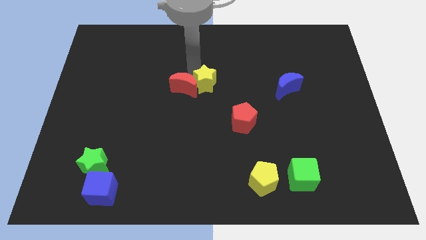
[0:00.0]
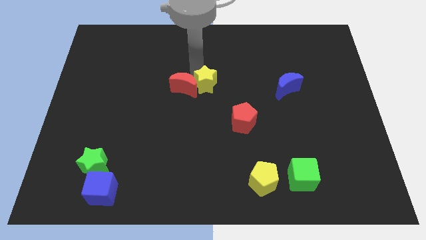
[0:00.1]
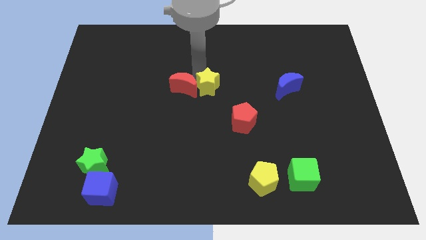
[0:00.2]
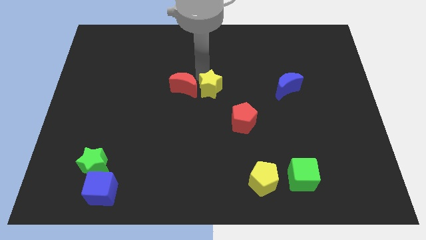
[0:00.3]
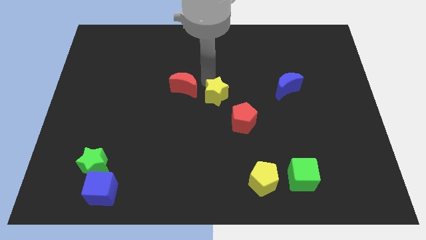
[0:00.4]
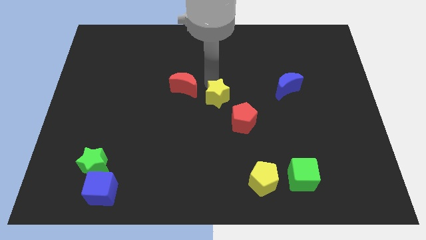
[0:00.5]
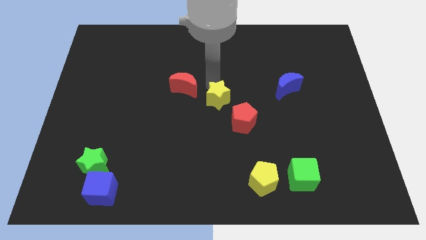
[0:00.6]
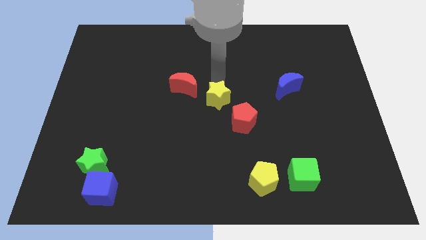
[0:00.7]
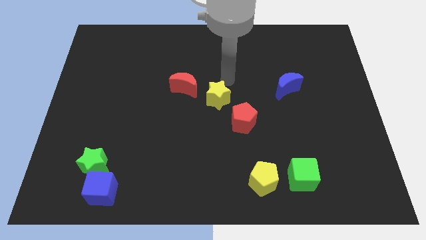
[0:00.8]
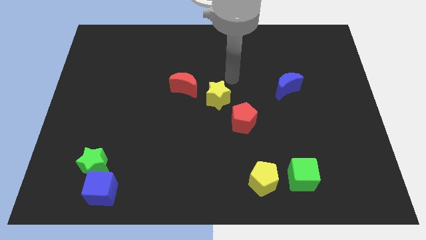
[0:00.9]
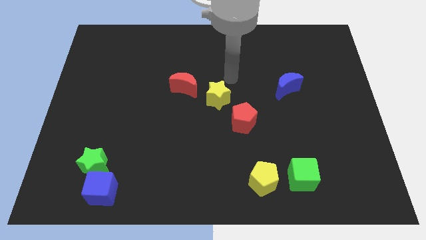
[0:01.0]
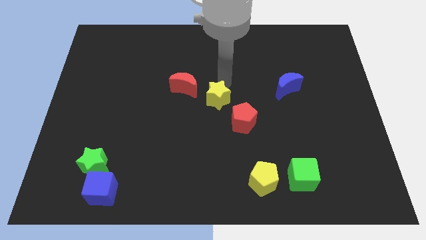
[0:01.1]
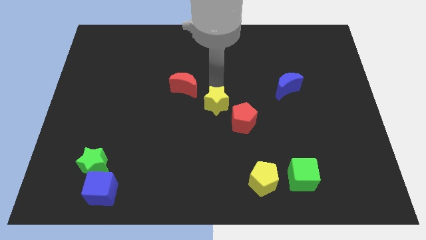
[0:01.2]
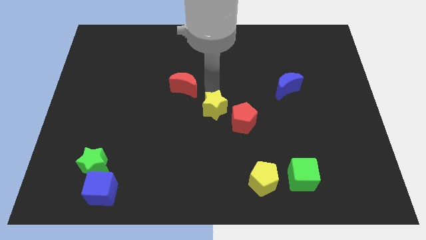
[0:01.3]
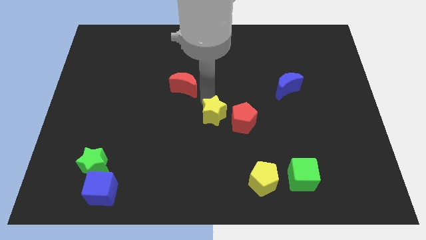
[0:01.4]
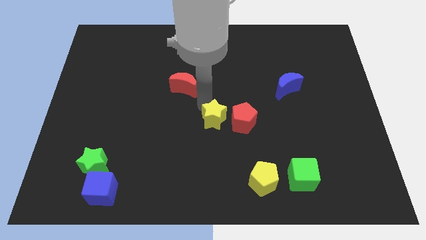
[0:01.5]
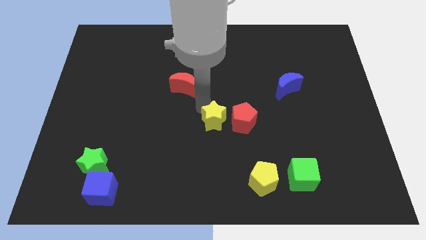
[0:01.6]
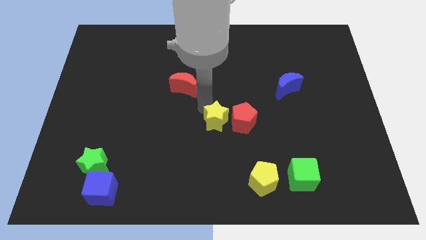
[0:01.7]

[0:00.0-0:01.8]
place the yellow star close to the red pentagon

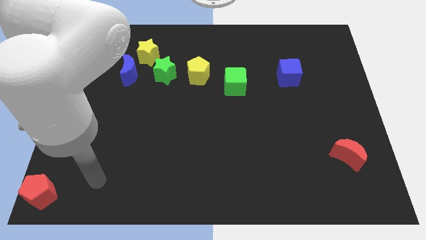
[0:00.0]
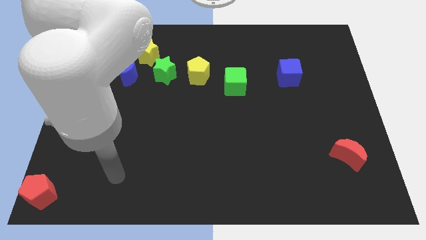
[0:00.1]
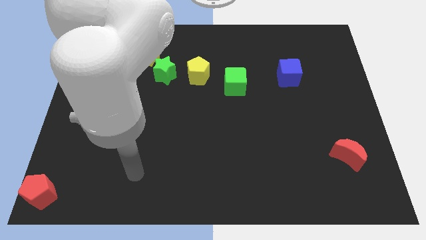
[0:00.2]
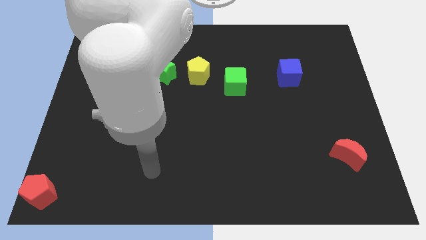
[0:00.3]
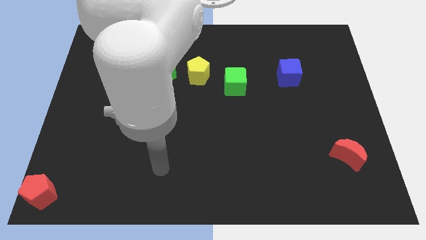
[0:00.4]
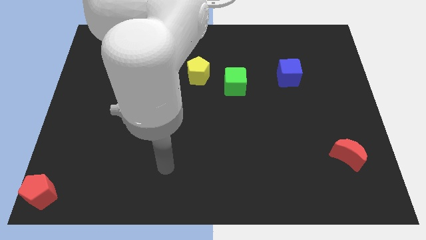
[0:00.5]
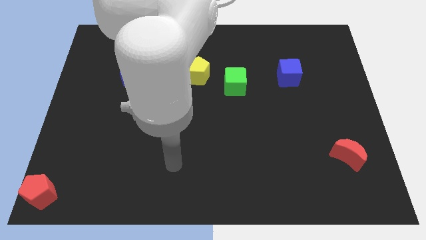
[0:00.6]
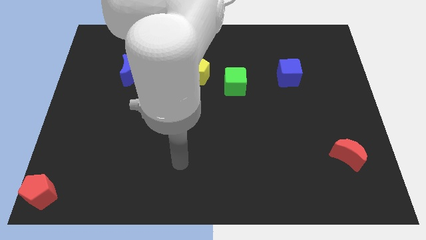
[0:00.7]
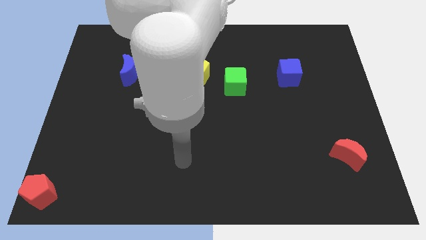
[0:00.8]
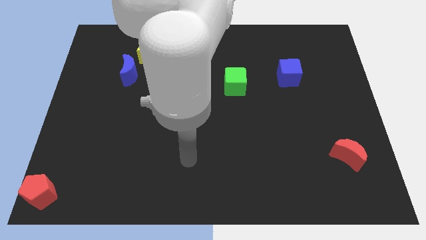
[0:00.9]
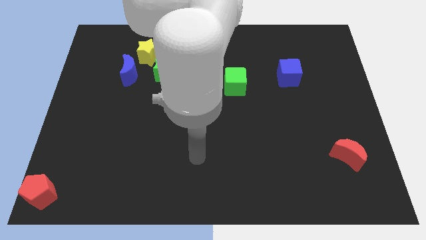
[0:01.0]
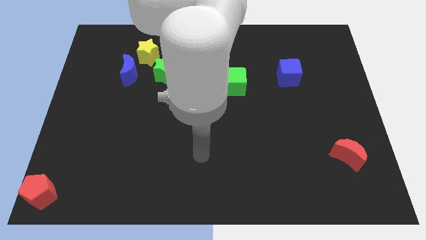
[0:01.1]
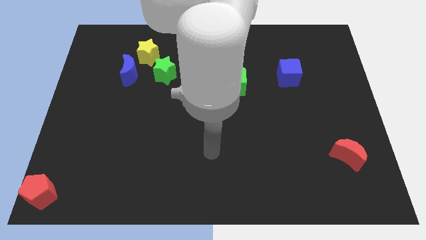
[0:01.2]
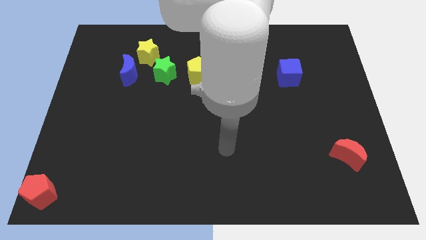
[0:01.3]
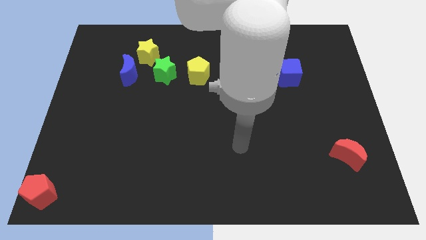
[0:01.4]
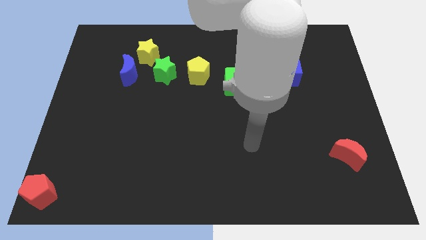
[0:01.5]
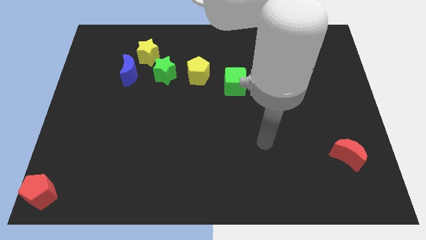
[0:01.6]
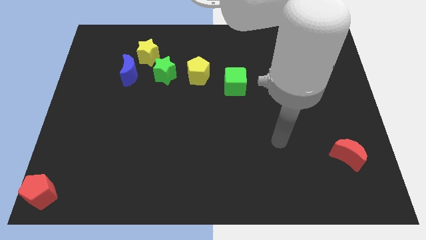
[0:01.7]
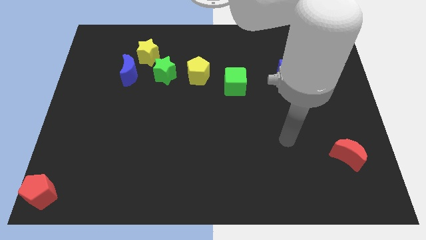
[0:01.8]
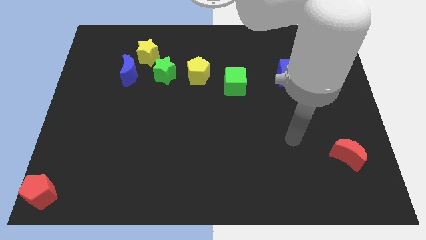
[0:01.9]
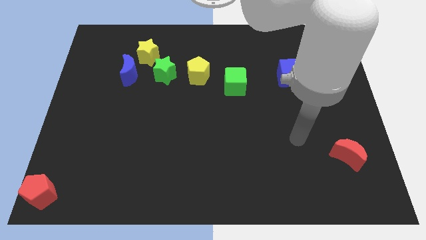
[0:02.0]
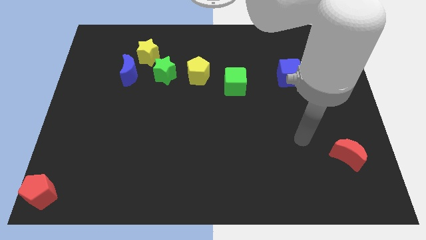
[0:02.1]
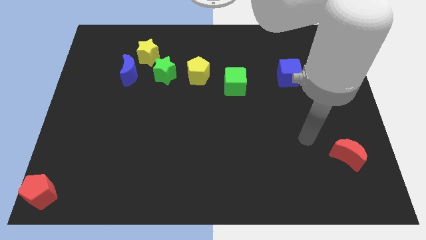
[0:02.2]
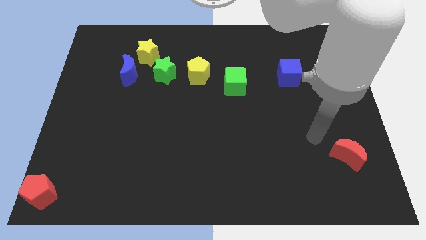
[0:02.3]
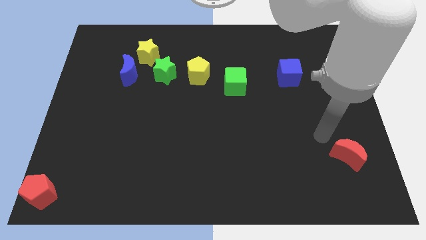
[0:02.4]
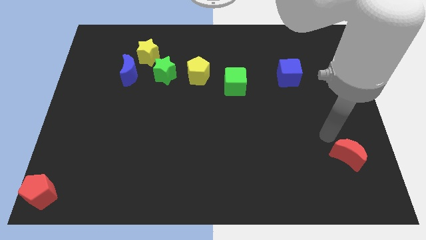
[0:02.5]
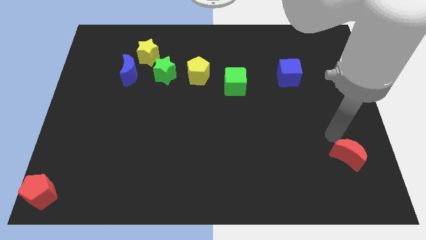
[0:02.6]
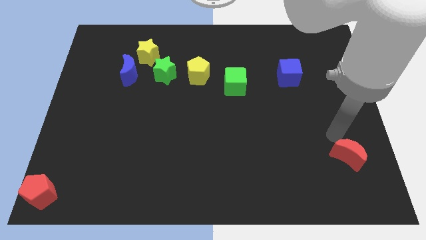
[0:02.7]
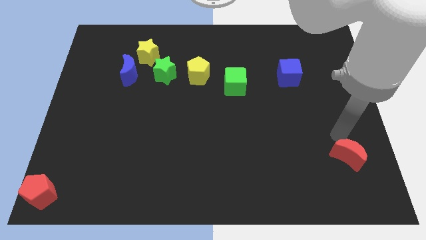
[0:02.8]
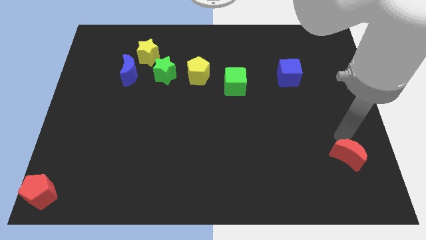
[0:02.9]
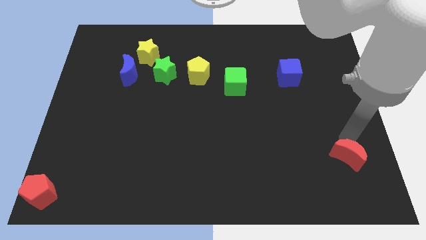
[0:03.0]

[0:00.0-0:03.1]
move your arm towards the red crescent

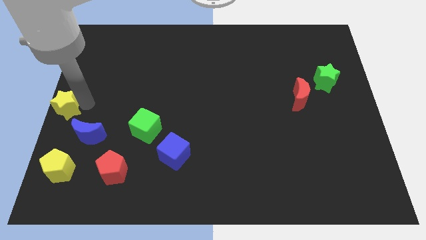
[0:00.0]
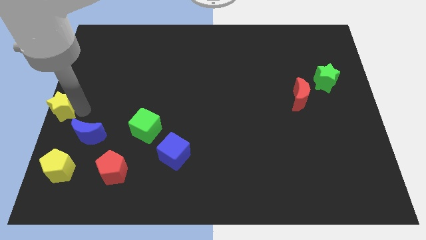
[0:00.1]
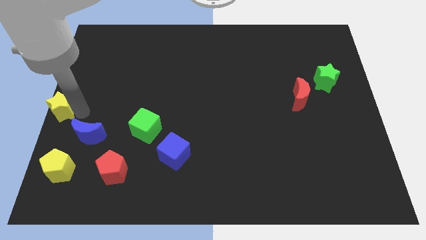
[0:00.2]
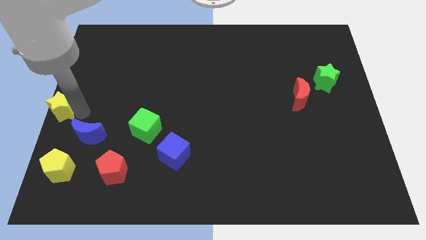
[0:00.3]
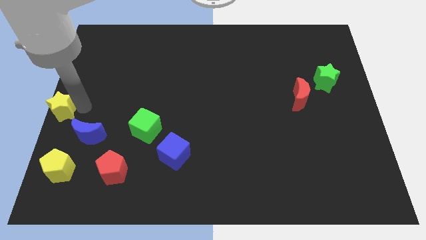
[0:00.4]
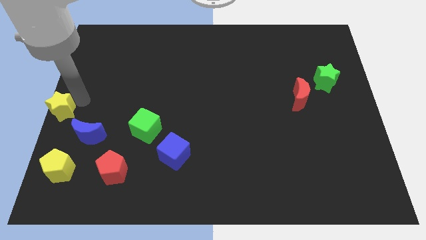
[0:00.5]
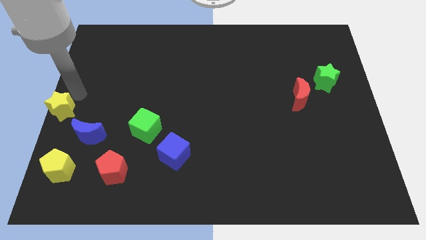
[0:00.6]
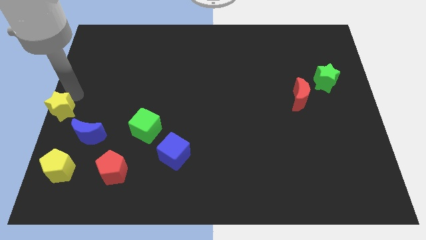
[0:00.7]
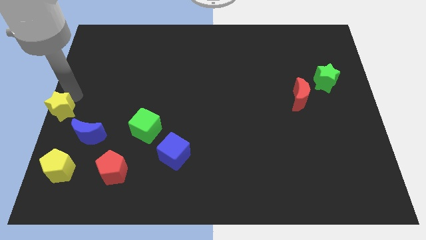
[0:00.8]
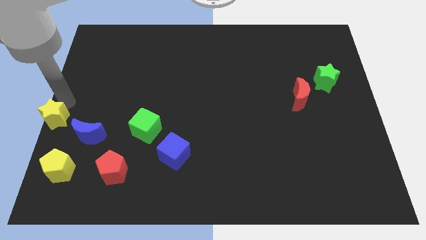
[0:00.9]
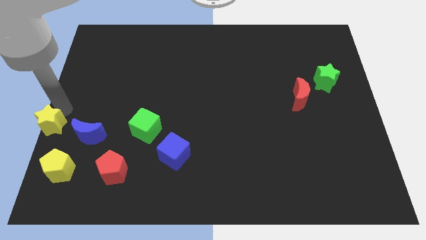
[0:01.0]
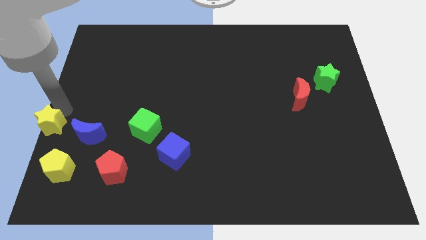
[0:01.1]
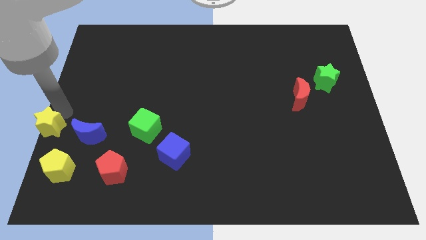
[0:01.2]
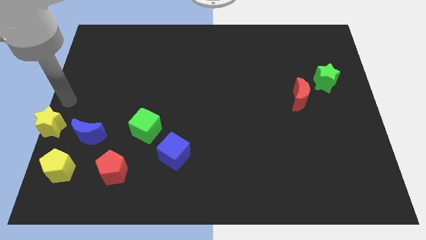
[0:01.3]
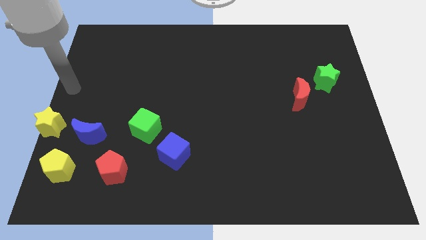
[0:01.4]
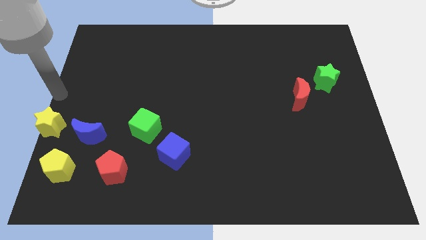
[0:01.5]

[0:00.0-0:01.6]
place the yellow star to the left of the blue crescent

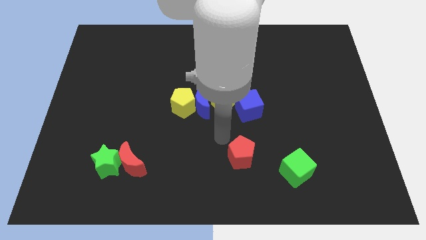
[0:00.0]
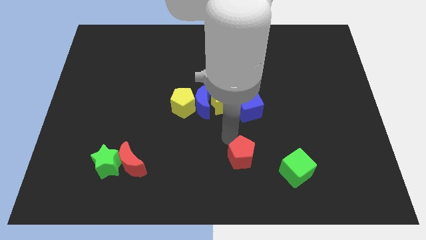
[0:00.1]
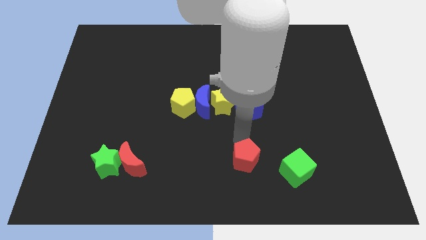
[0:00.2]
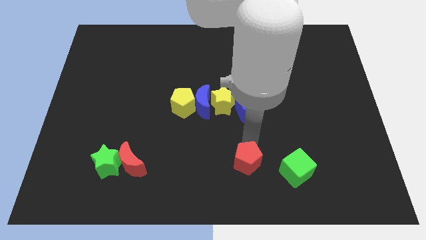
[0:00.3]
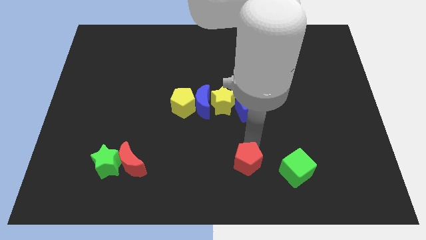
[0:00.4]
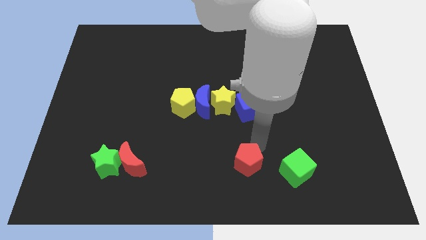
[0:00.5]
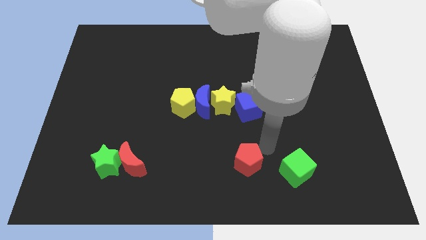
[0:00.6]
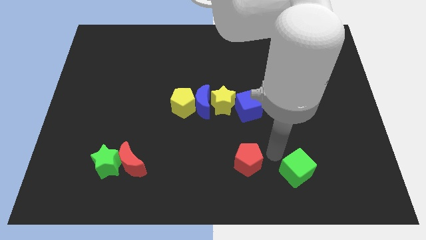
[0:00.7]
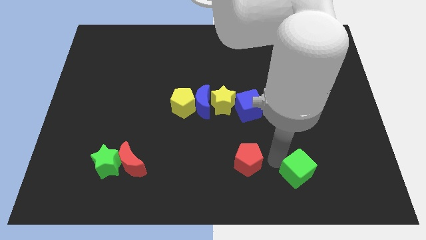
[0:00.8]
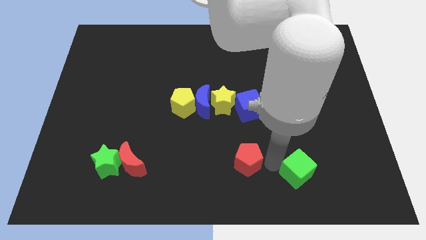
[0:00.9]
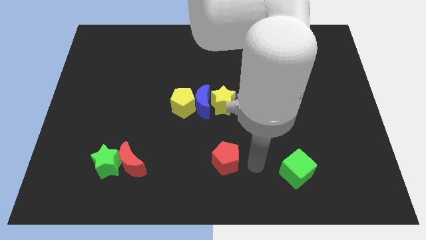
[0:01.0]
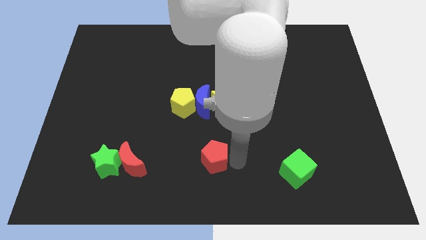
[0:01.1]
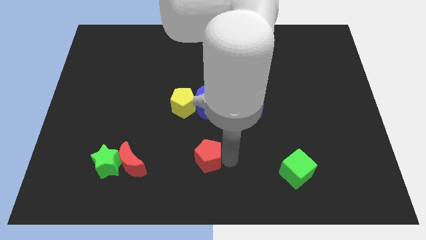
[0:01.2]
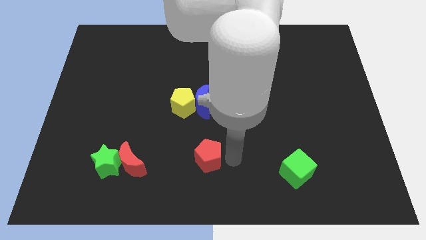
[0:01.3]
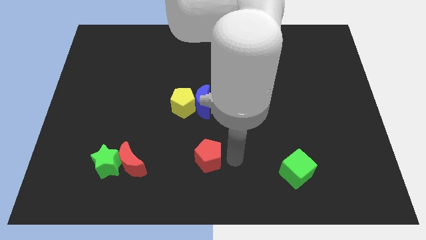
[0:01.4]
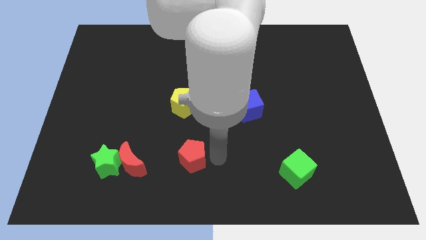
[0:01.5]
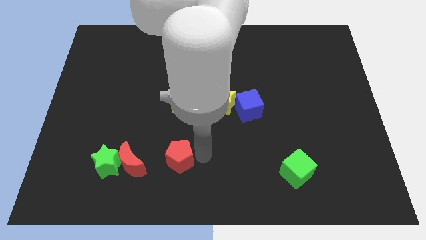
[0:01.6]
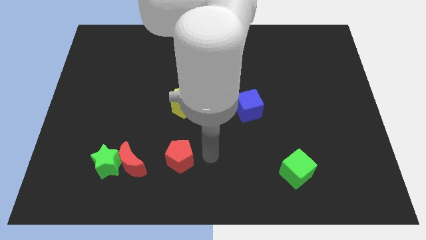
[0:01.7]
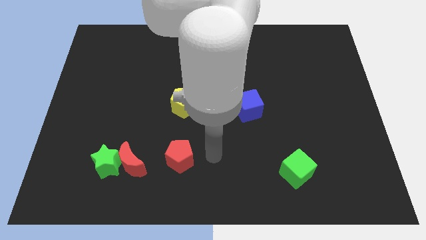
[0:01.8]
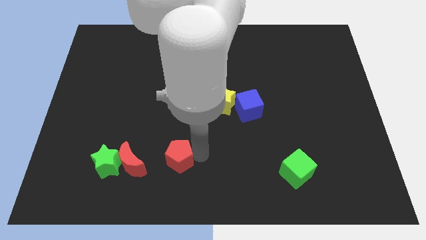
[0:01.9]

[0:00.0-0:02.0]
push the red pentagon towards the red crescent

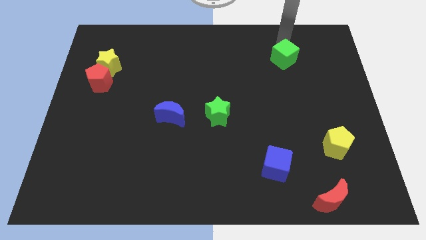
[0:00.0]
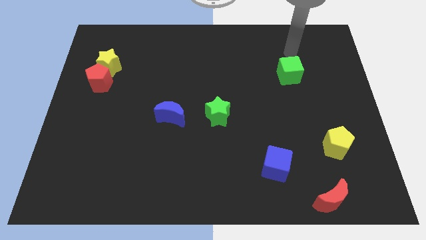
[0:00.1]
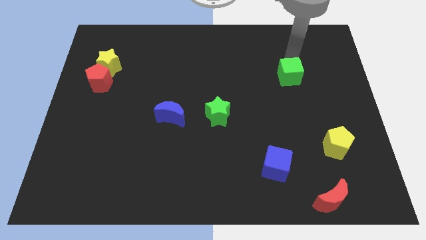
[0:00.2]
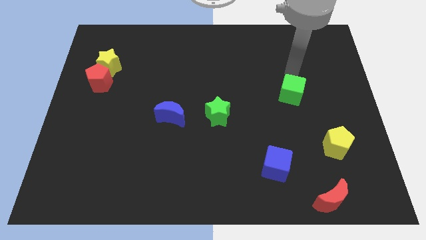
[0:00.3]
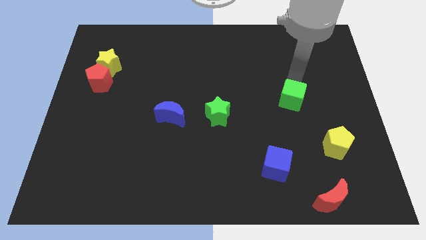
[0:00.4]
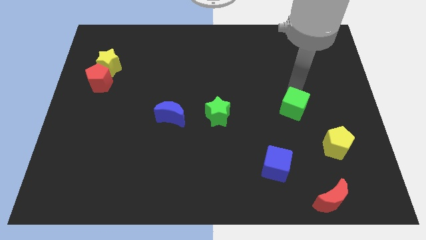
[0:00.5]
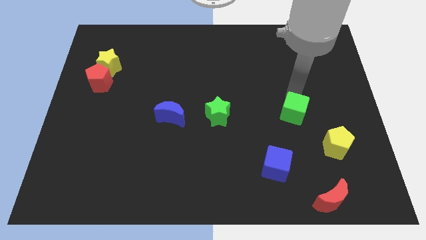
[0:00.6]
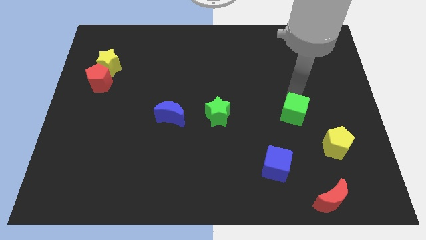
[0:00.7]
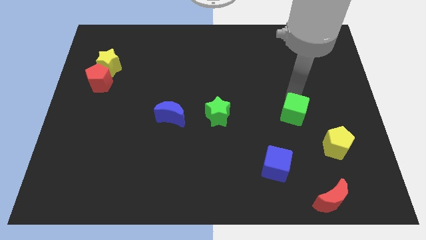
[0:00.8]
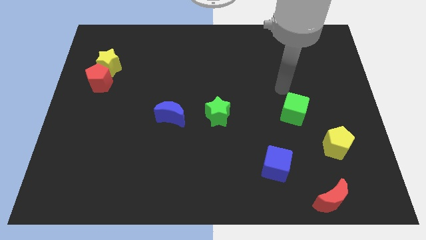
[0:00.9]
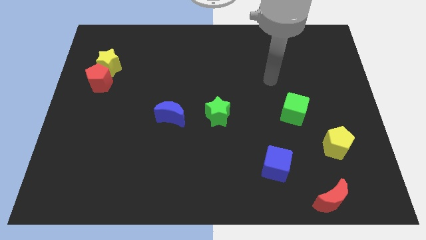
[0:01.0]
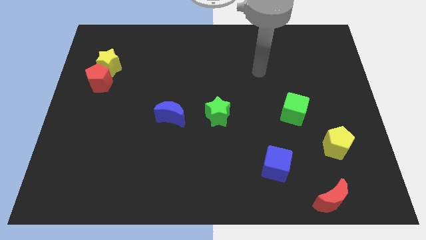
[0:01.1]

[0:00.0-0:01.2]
push green cube towards the blue cube
